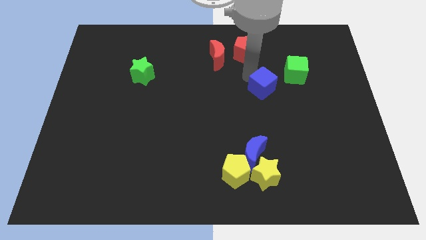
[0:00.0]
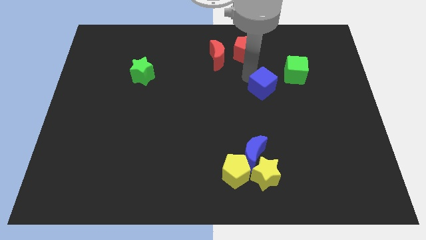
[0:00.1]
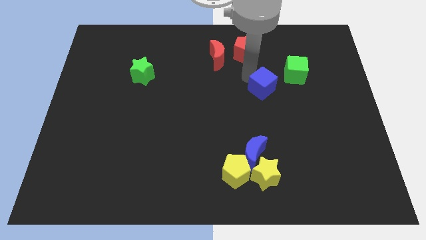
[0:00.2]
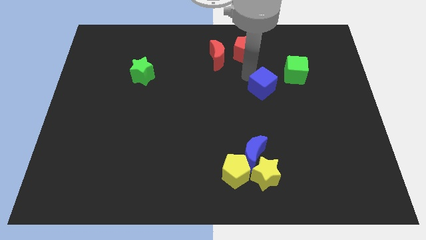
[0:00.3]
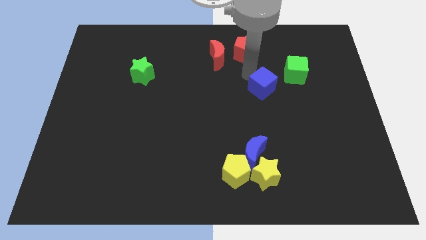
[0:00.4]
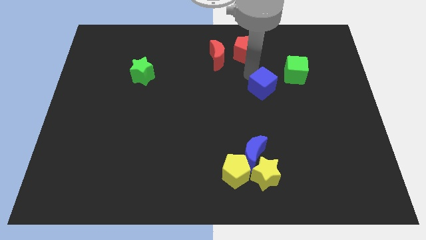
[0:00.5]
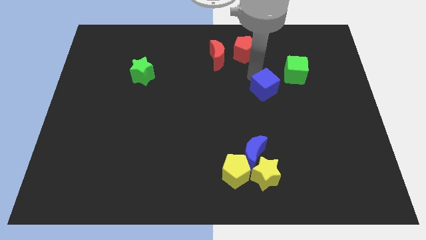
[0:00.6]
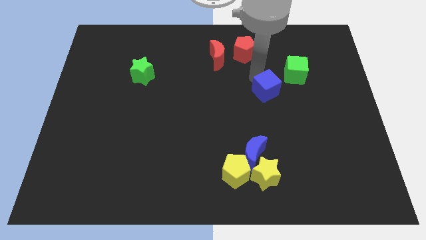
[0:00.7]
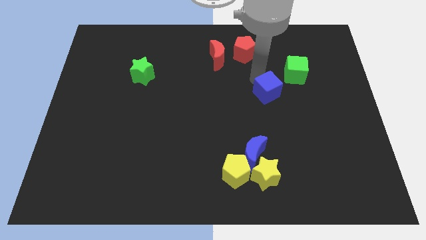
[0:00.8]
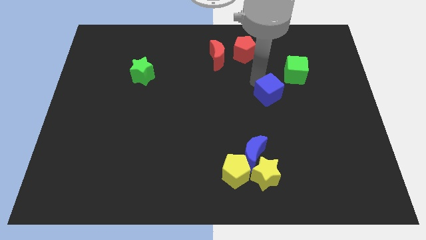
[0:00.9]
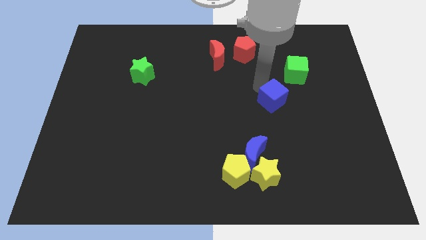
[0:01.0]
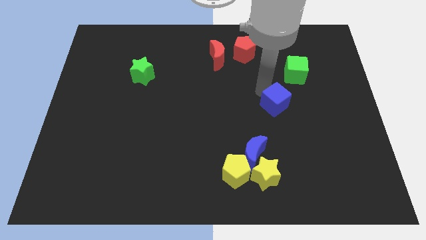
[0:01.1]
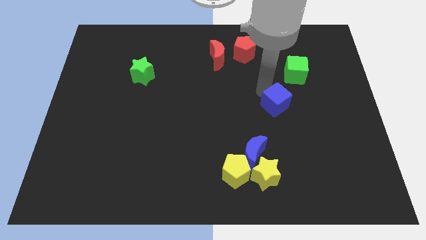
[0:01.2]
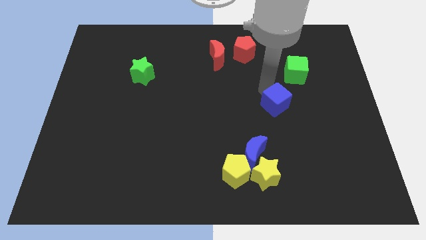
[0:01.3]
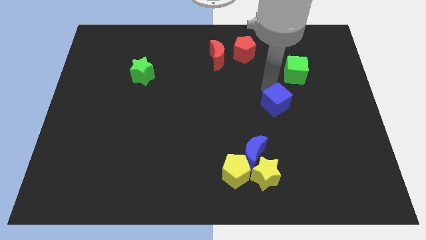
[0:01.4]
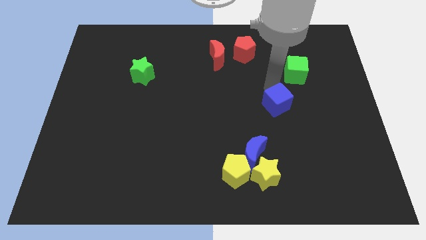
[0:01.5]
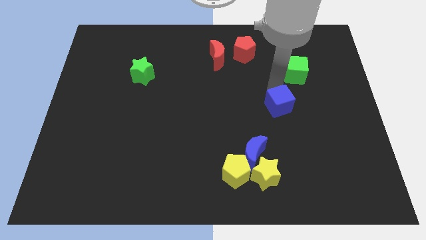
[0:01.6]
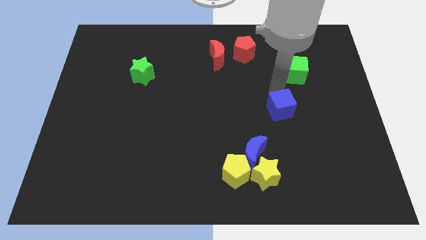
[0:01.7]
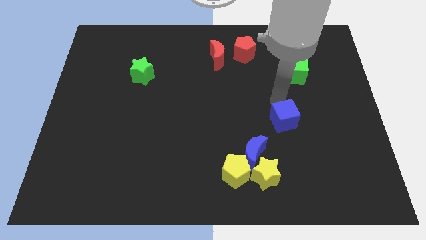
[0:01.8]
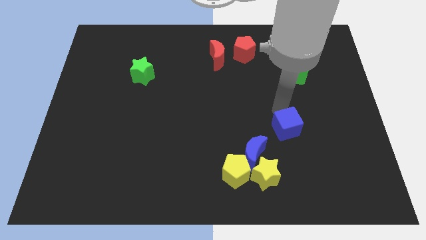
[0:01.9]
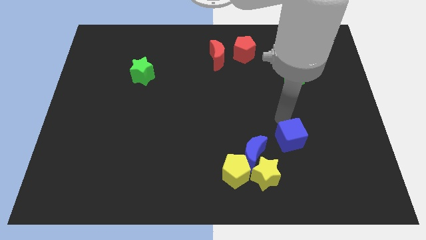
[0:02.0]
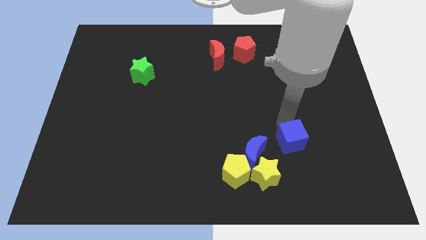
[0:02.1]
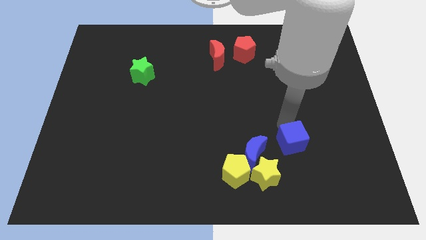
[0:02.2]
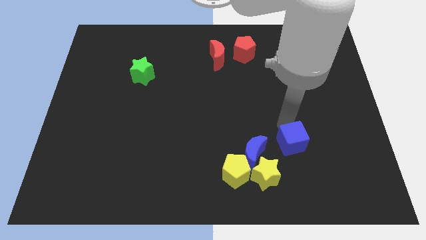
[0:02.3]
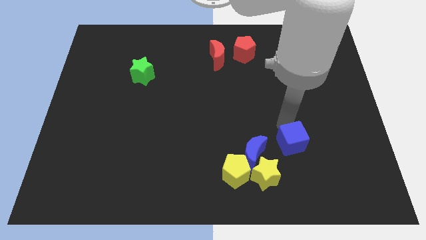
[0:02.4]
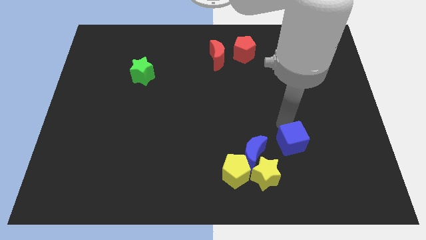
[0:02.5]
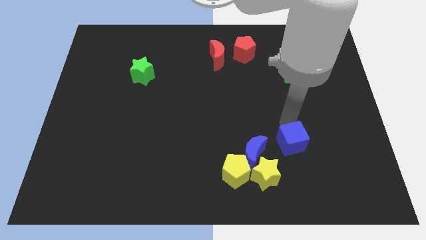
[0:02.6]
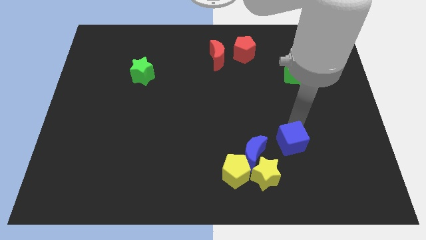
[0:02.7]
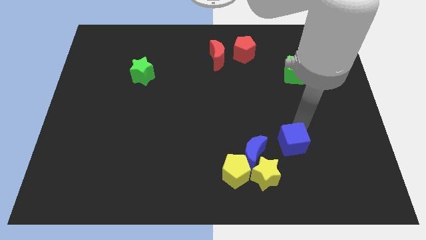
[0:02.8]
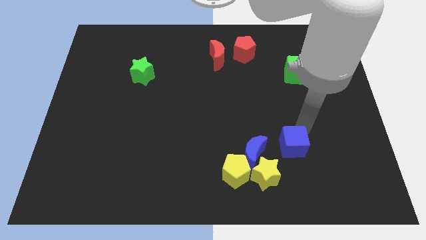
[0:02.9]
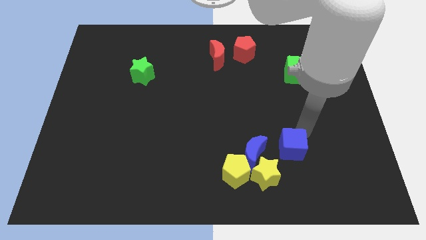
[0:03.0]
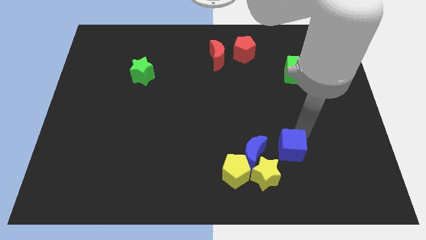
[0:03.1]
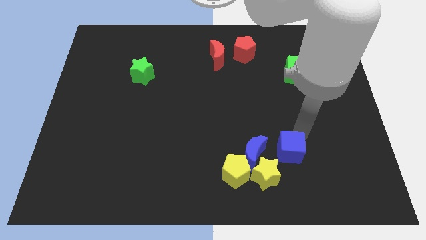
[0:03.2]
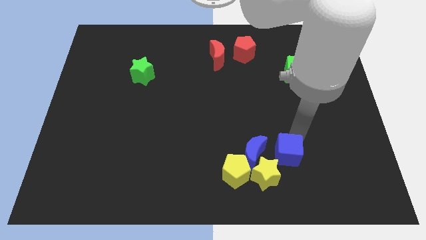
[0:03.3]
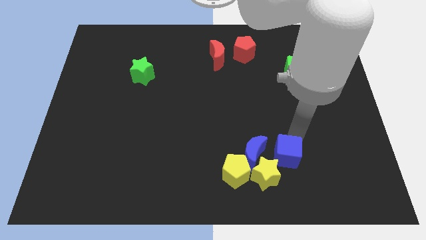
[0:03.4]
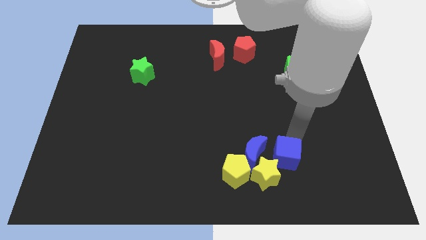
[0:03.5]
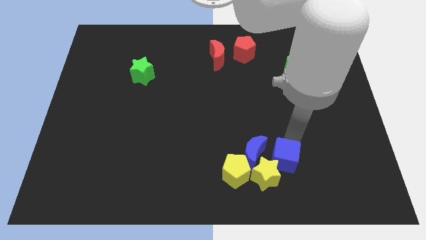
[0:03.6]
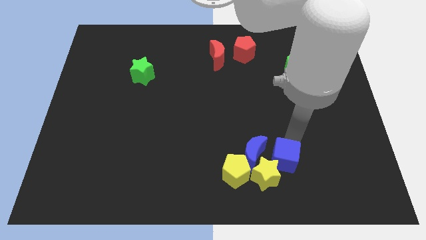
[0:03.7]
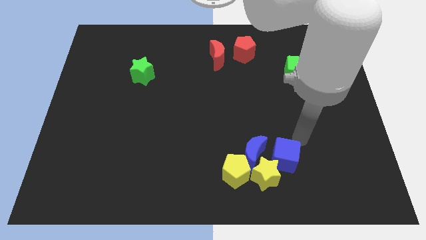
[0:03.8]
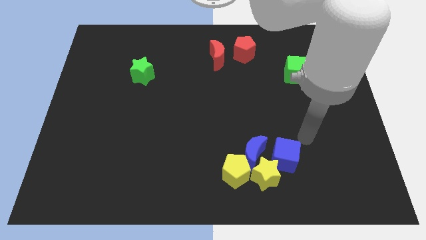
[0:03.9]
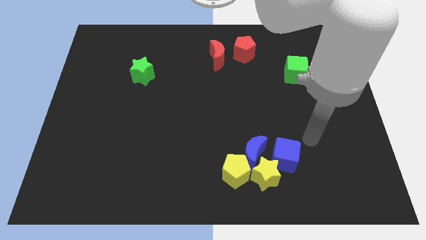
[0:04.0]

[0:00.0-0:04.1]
push the blue cube towards the yellow star

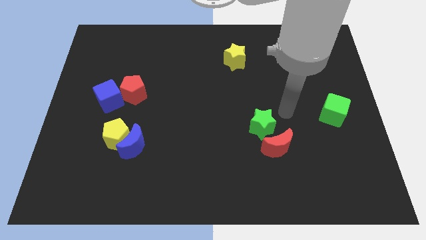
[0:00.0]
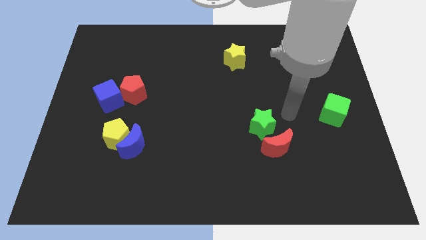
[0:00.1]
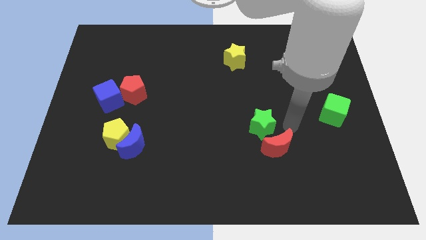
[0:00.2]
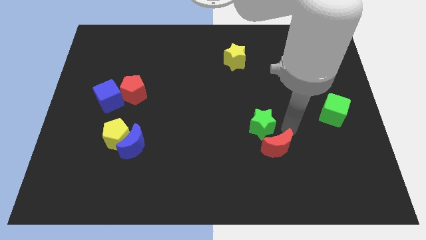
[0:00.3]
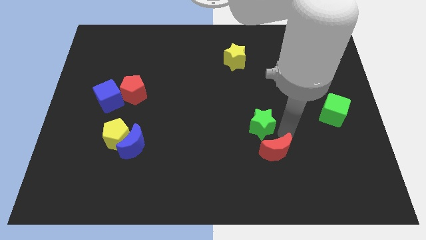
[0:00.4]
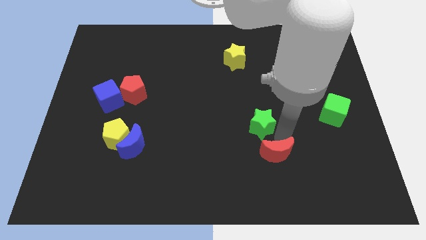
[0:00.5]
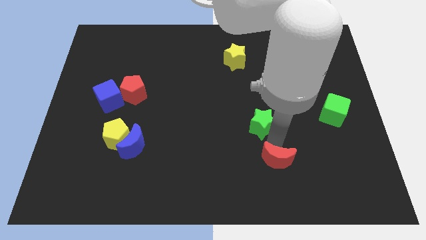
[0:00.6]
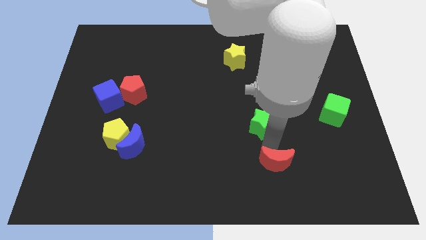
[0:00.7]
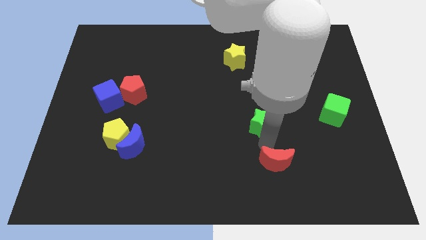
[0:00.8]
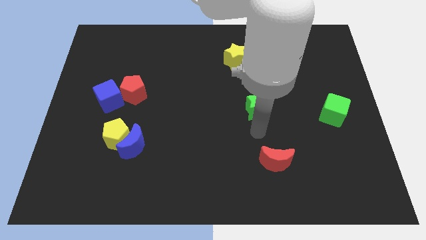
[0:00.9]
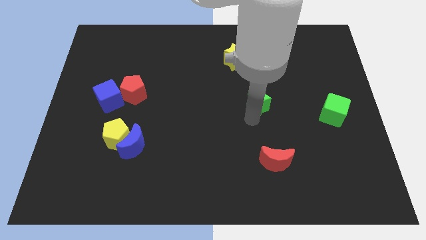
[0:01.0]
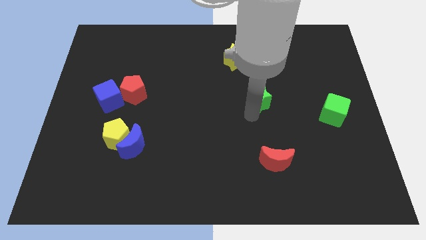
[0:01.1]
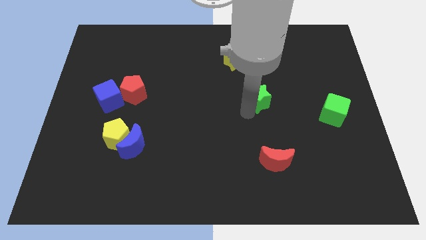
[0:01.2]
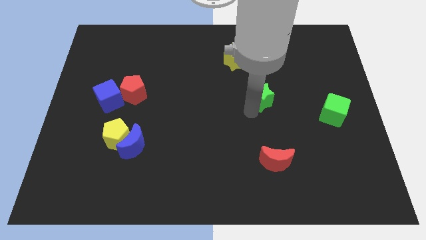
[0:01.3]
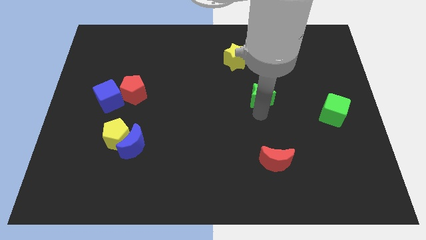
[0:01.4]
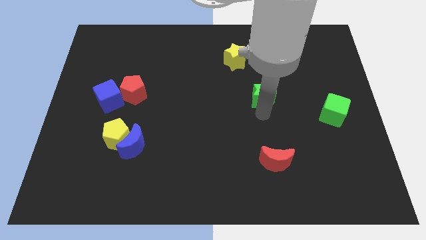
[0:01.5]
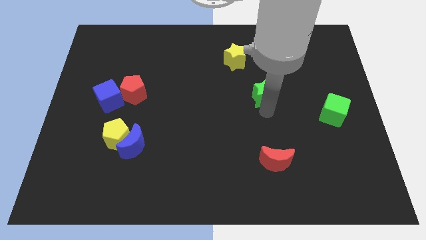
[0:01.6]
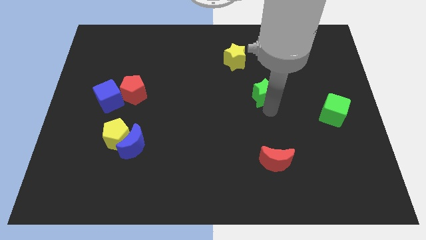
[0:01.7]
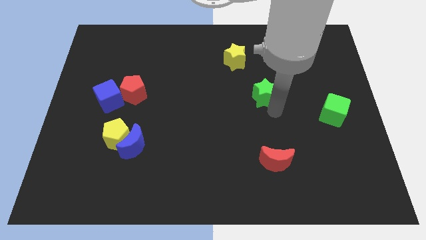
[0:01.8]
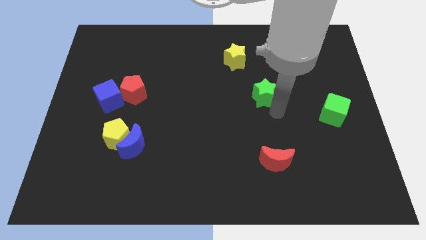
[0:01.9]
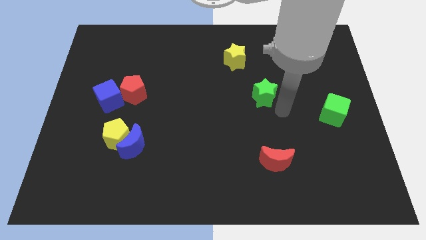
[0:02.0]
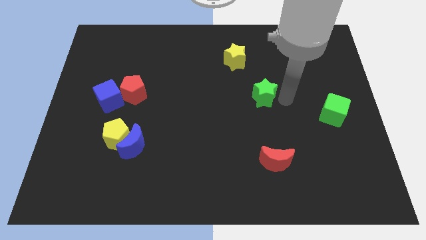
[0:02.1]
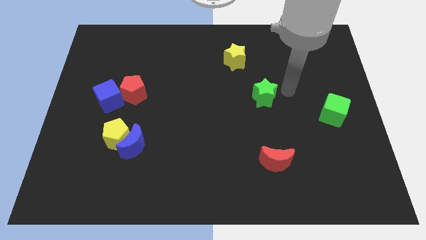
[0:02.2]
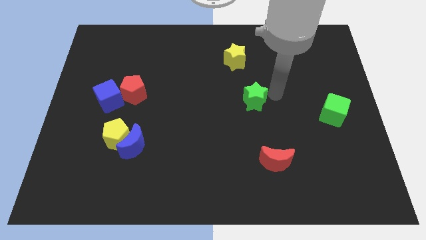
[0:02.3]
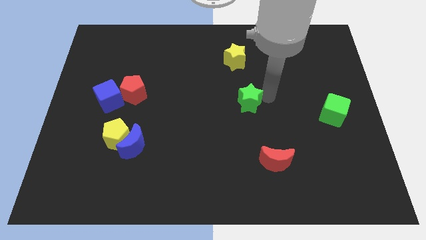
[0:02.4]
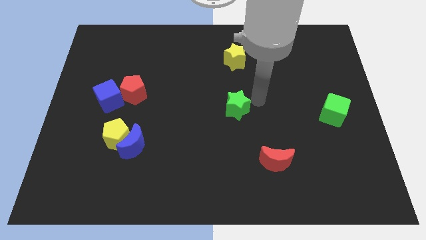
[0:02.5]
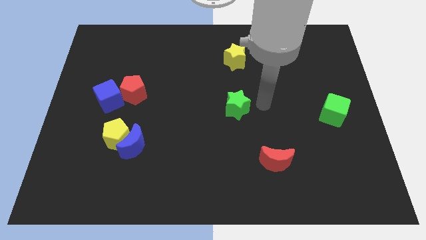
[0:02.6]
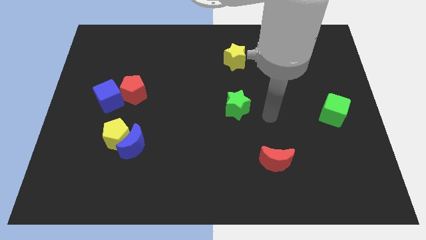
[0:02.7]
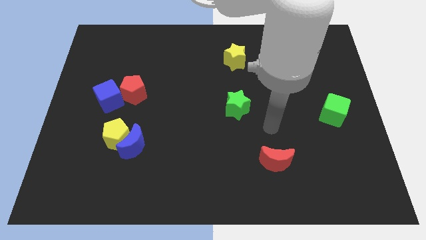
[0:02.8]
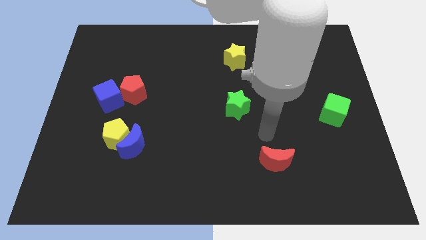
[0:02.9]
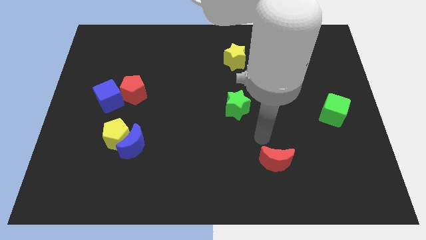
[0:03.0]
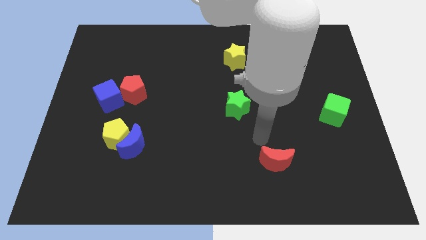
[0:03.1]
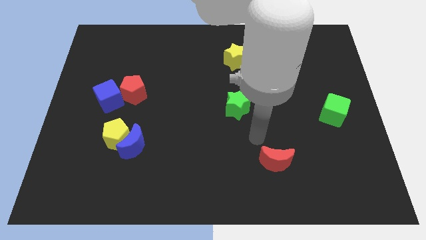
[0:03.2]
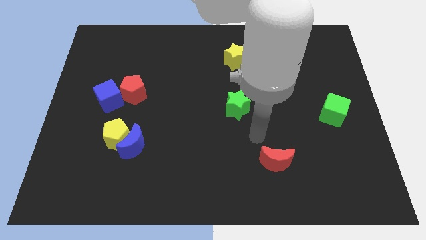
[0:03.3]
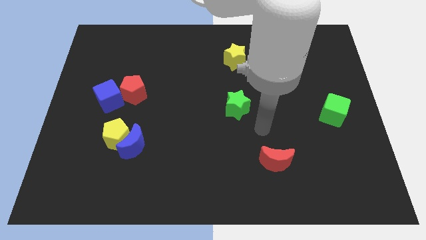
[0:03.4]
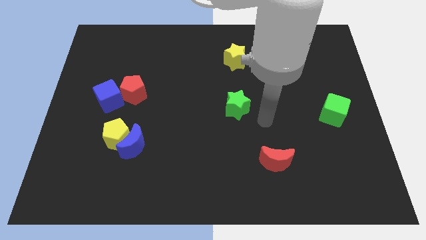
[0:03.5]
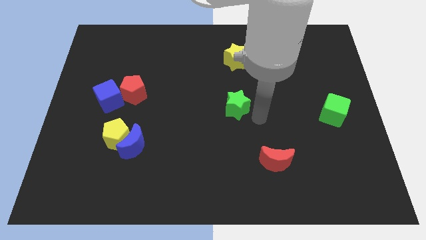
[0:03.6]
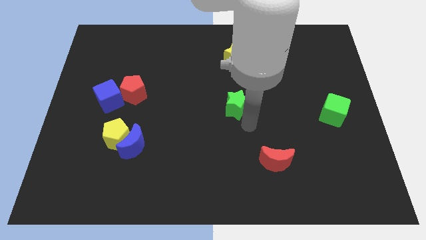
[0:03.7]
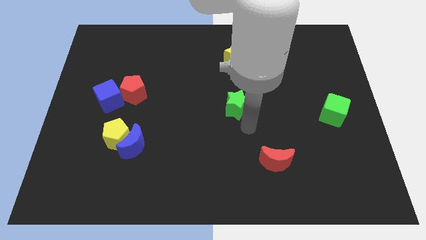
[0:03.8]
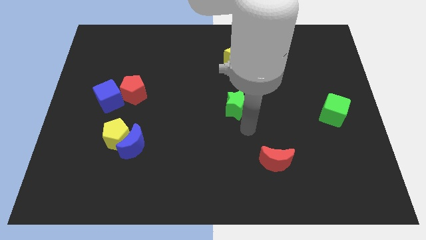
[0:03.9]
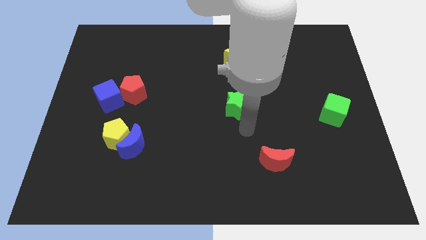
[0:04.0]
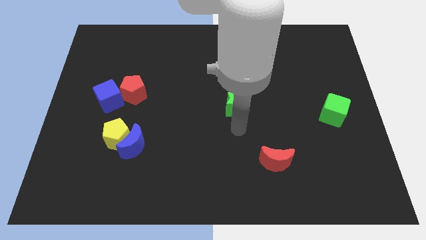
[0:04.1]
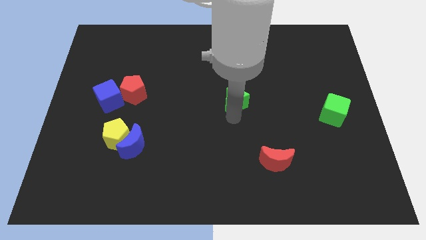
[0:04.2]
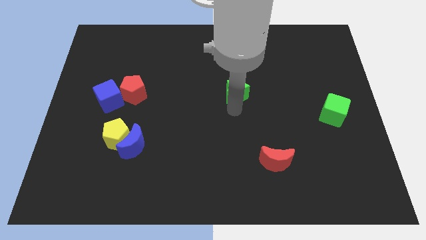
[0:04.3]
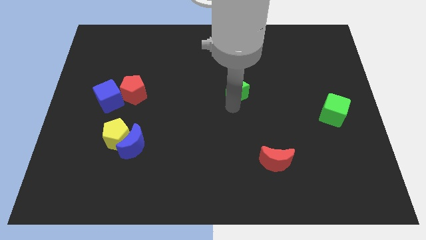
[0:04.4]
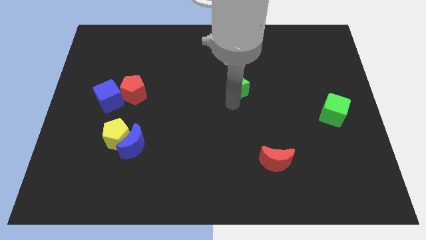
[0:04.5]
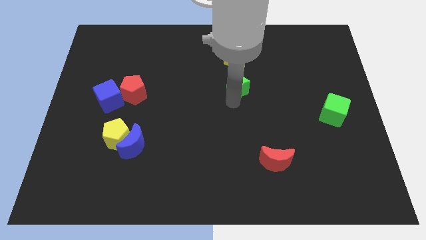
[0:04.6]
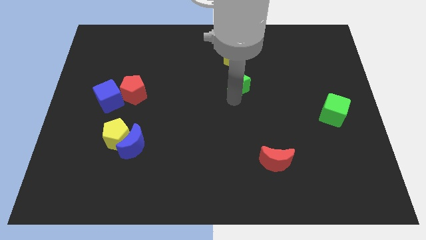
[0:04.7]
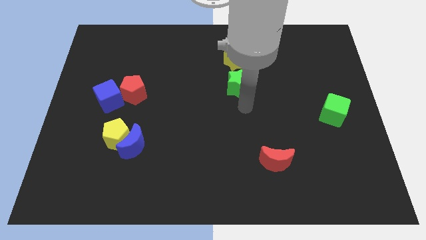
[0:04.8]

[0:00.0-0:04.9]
push the green star close to the yellow star
